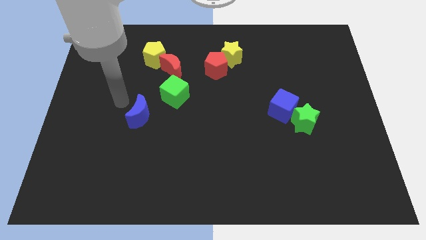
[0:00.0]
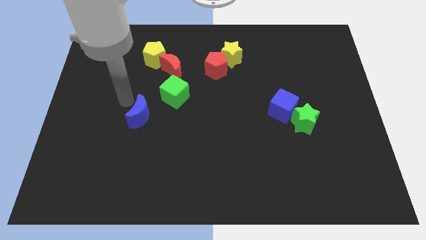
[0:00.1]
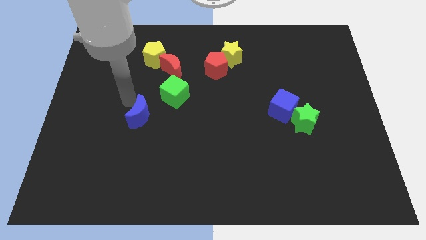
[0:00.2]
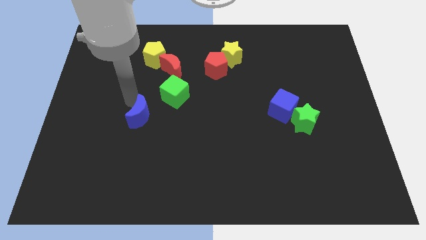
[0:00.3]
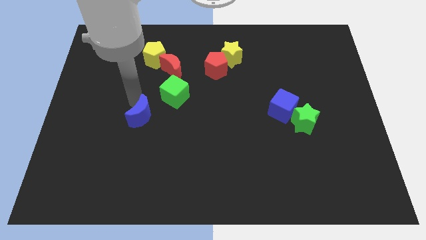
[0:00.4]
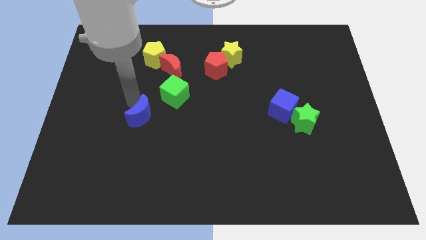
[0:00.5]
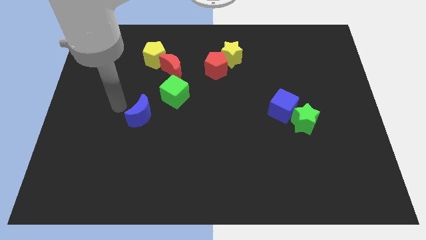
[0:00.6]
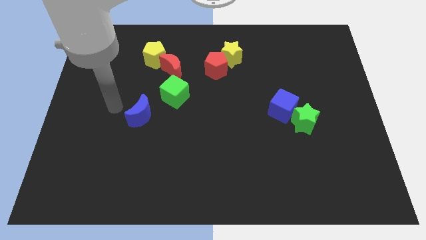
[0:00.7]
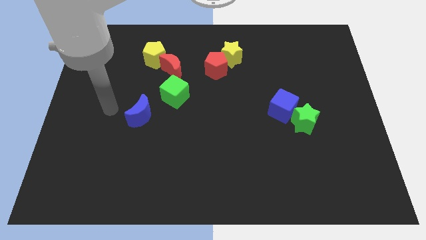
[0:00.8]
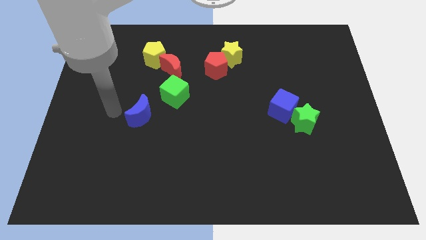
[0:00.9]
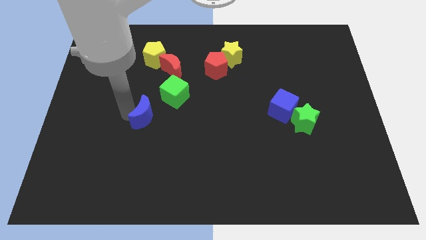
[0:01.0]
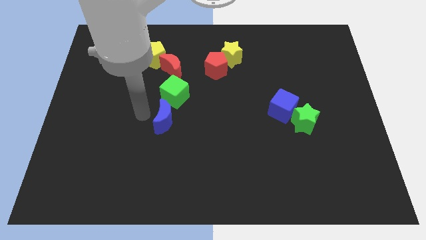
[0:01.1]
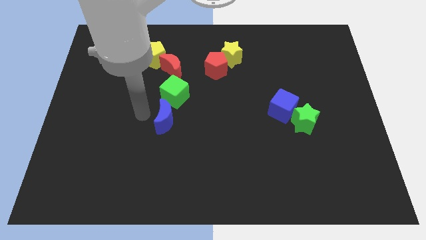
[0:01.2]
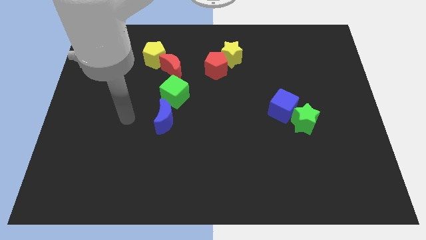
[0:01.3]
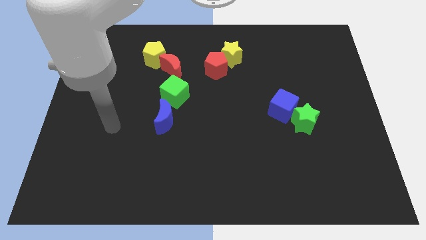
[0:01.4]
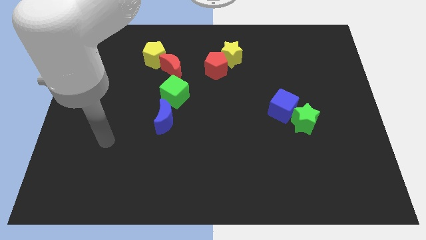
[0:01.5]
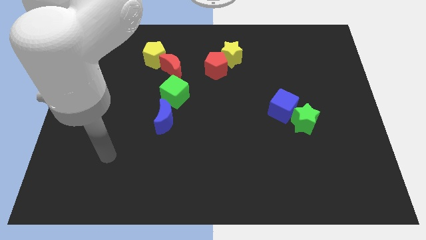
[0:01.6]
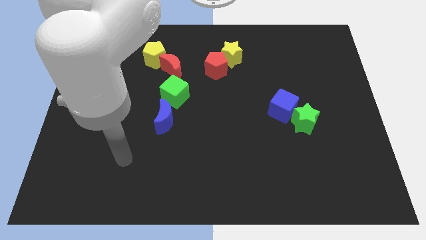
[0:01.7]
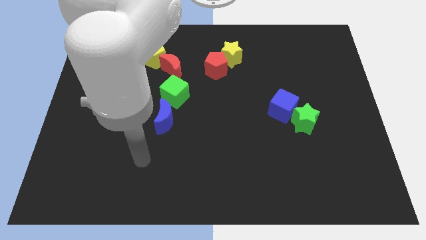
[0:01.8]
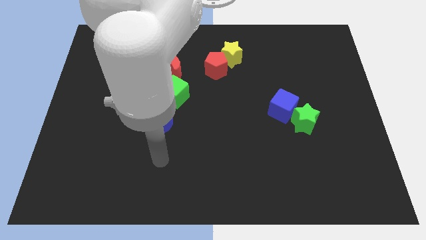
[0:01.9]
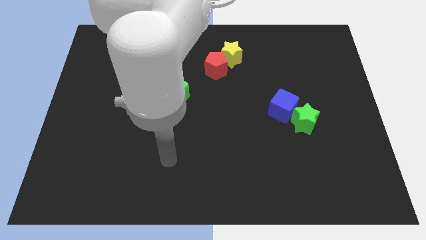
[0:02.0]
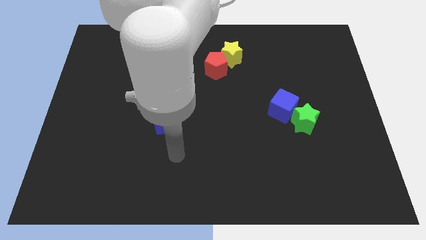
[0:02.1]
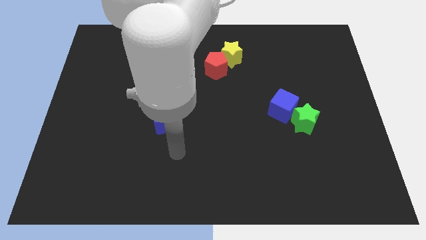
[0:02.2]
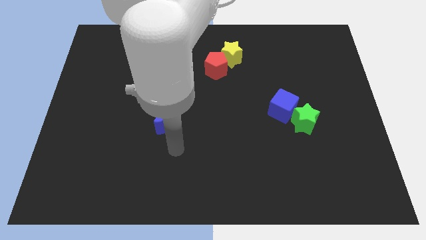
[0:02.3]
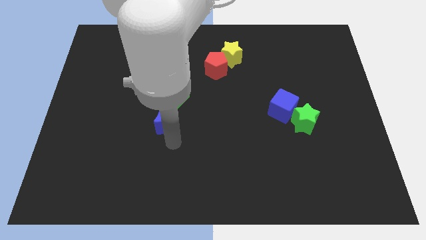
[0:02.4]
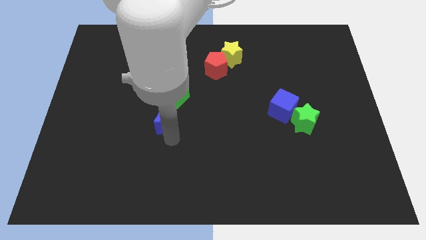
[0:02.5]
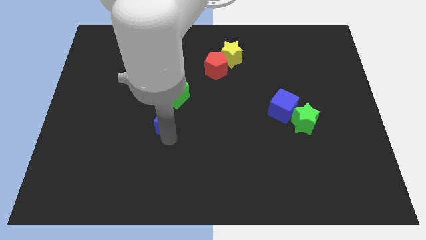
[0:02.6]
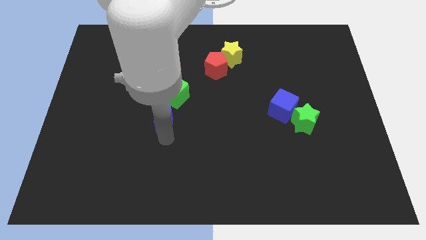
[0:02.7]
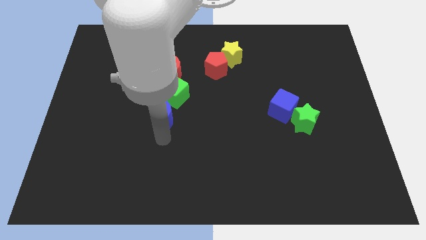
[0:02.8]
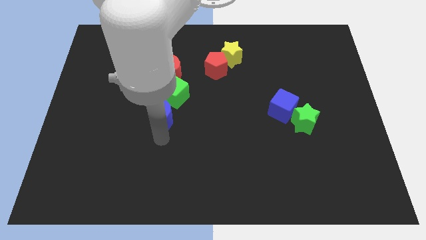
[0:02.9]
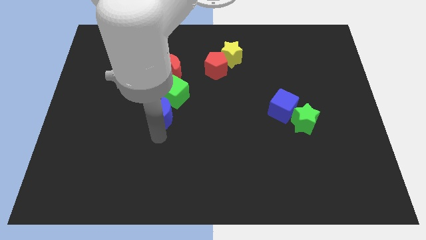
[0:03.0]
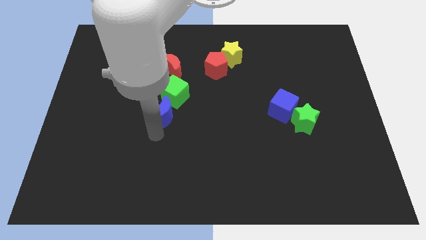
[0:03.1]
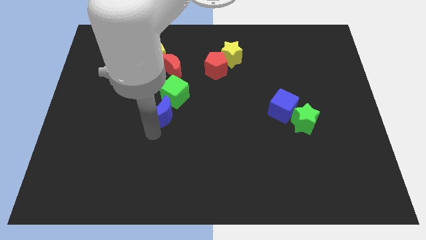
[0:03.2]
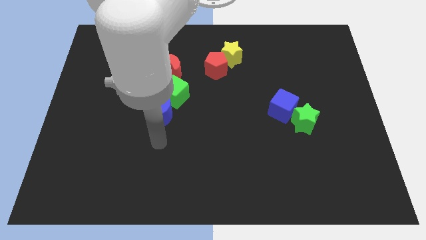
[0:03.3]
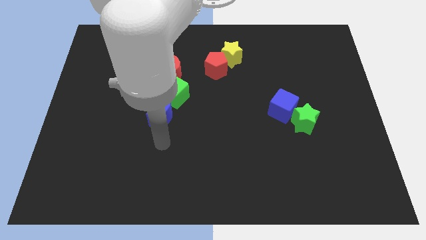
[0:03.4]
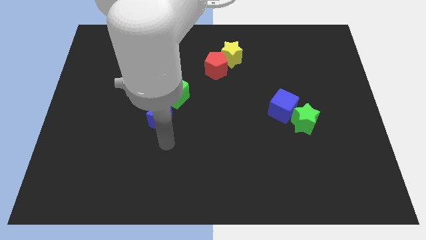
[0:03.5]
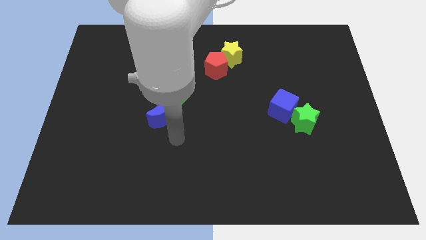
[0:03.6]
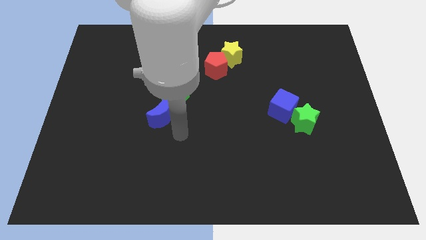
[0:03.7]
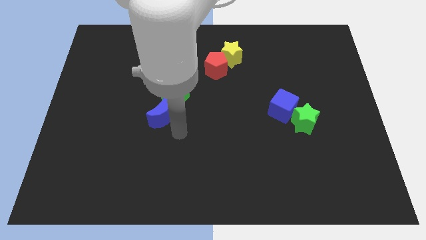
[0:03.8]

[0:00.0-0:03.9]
move the blue crescent to the bottom of the green cube

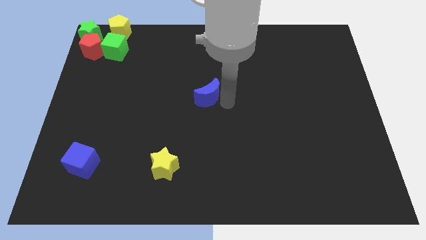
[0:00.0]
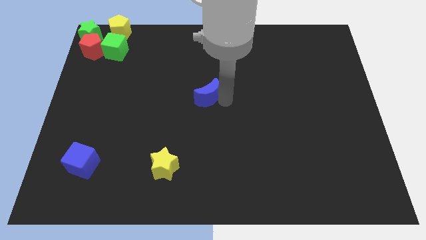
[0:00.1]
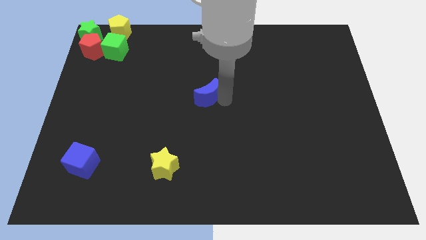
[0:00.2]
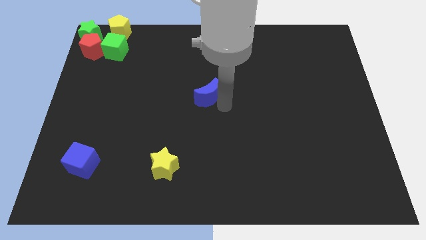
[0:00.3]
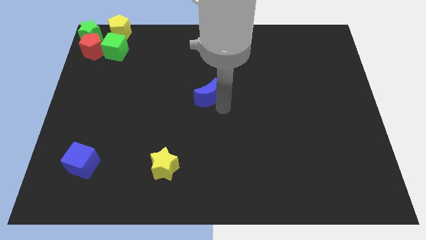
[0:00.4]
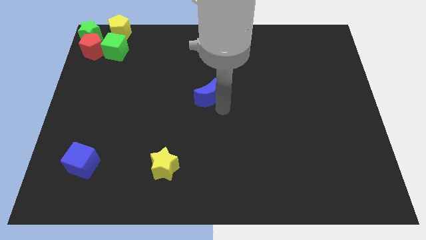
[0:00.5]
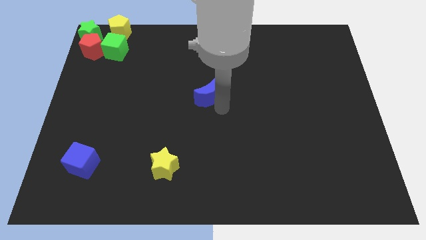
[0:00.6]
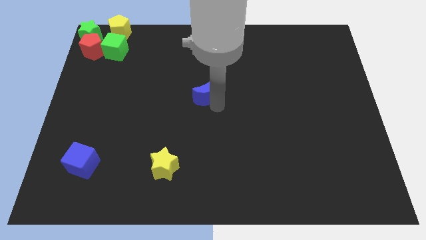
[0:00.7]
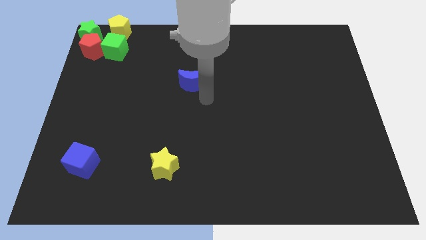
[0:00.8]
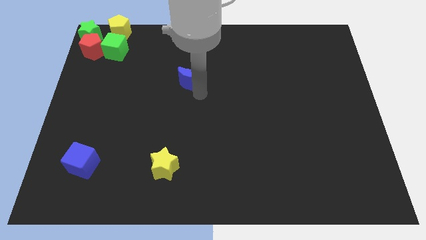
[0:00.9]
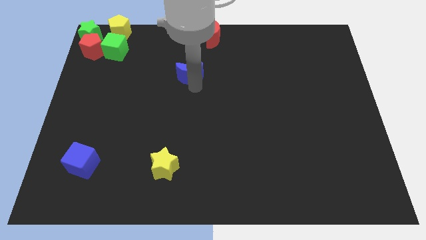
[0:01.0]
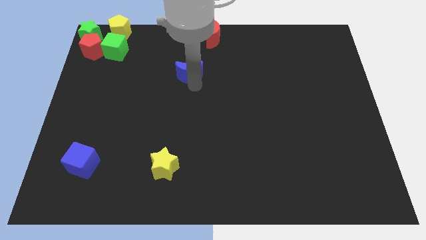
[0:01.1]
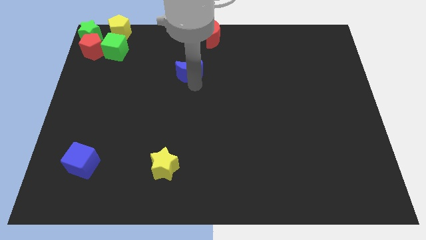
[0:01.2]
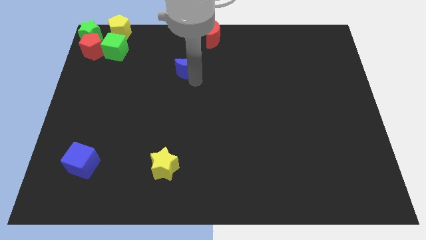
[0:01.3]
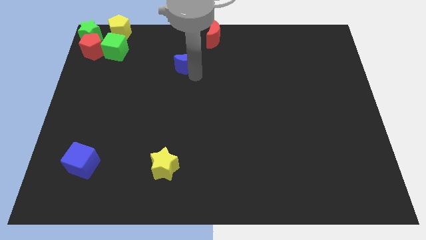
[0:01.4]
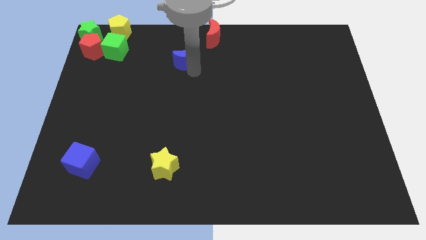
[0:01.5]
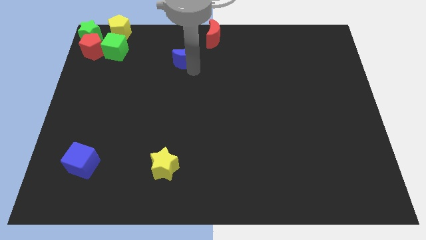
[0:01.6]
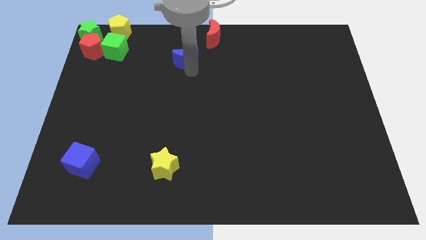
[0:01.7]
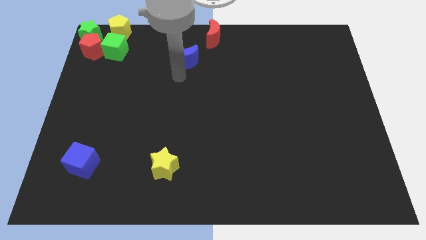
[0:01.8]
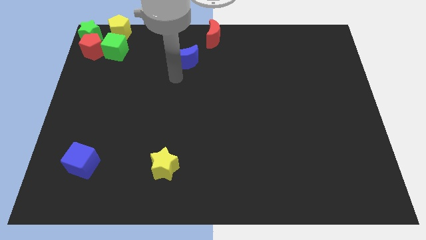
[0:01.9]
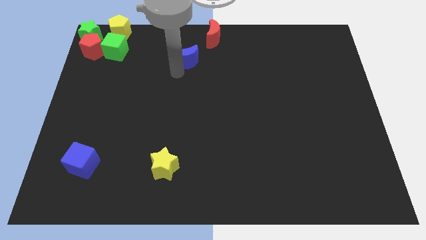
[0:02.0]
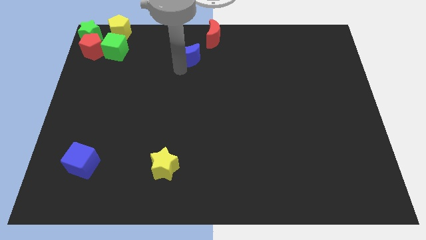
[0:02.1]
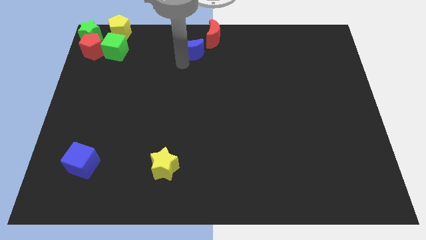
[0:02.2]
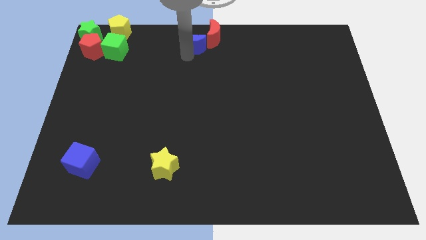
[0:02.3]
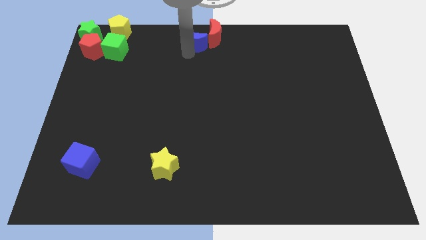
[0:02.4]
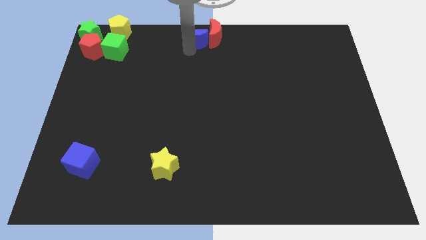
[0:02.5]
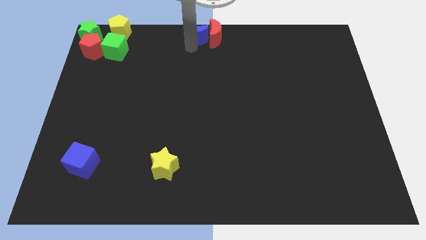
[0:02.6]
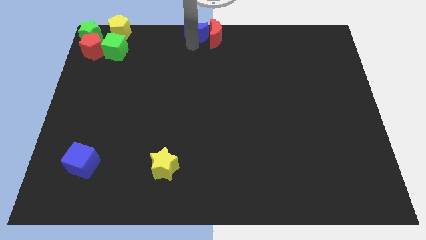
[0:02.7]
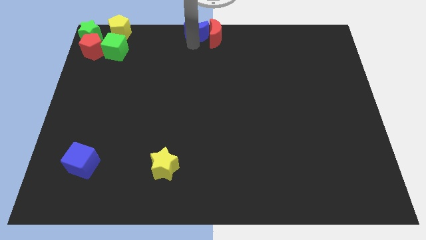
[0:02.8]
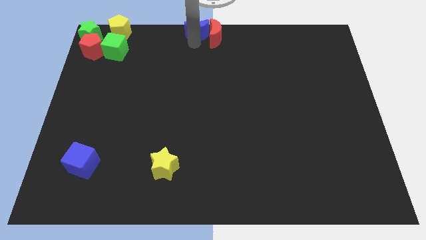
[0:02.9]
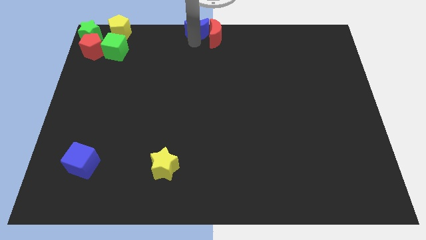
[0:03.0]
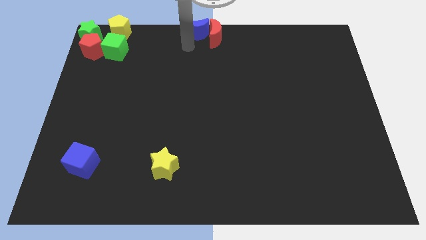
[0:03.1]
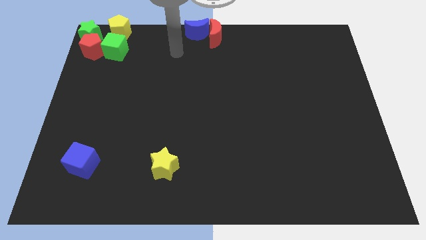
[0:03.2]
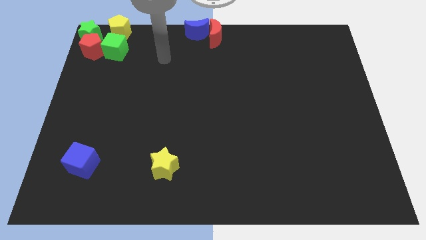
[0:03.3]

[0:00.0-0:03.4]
move the blue crescent to the left of the red crescent

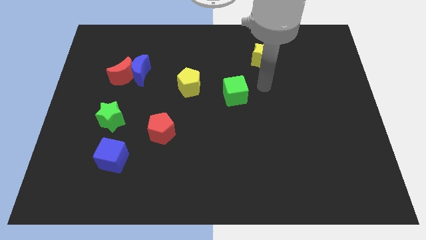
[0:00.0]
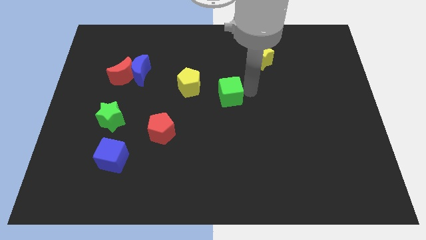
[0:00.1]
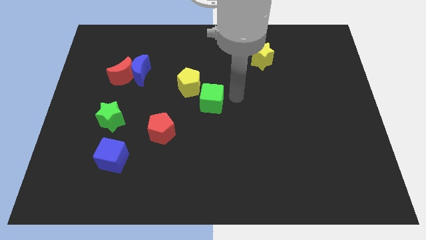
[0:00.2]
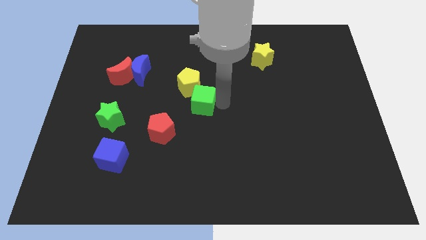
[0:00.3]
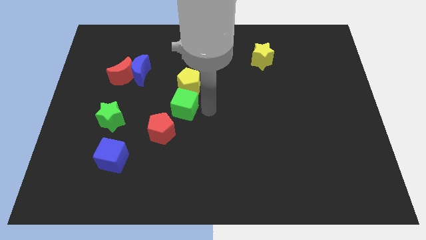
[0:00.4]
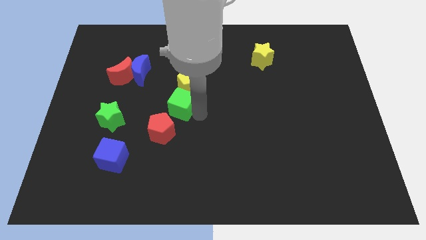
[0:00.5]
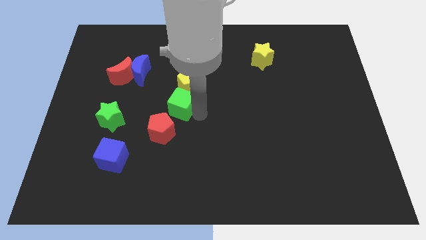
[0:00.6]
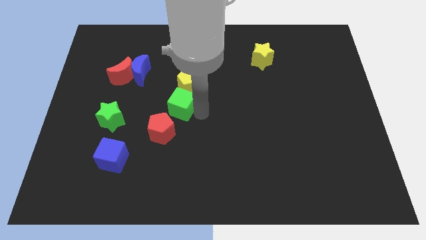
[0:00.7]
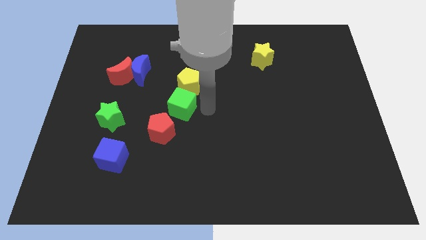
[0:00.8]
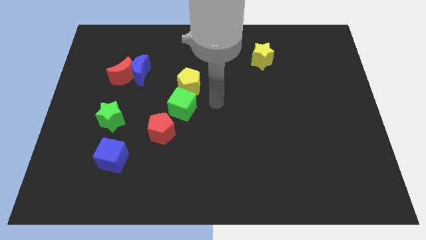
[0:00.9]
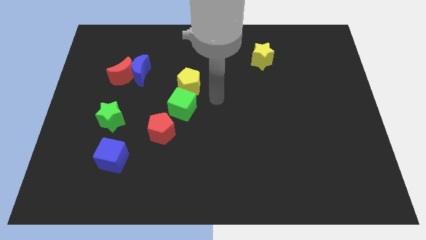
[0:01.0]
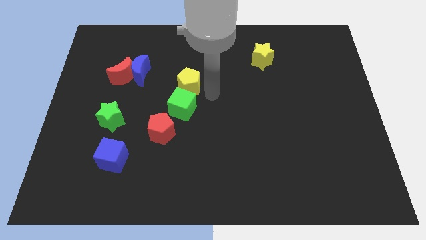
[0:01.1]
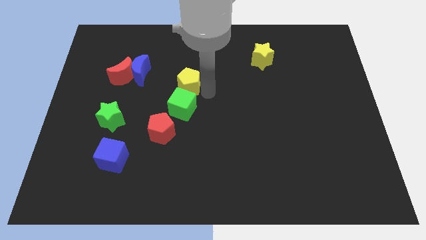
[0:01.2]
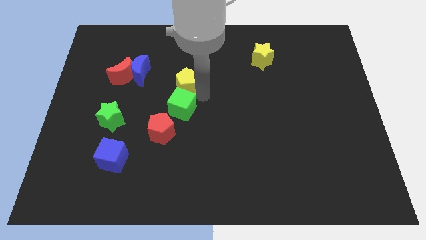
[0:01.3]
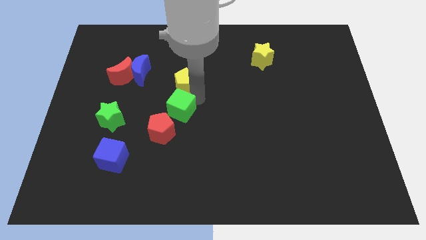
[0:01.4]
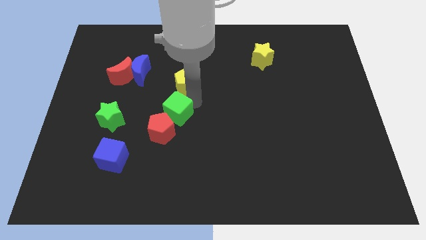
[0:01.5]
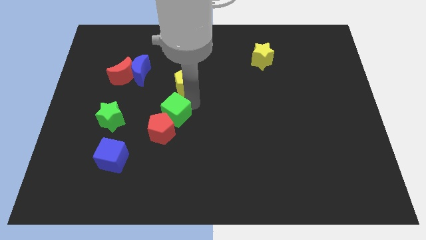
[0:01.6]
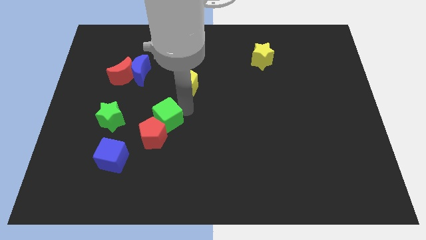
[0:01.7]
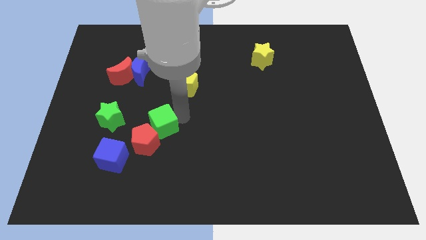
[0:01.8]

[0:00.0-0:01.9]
push the green cube into the top right side of the red pentagon
